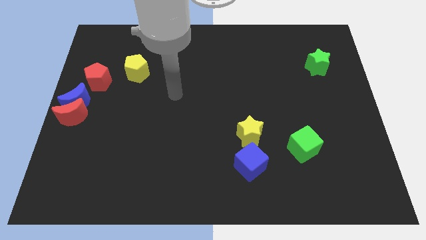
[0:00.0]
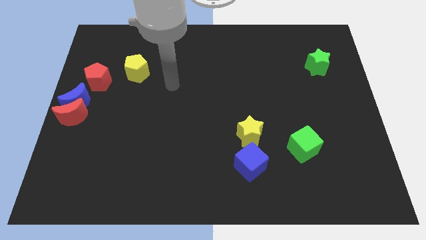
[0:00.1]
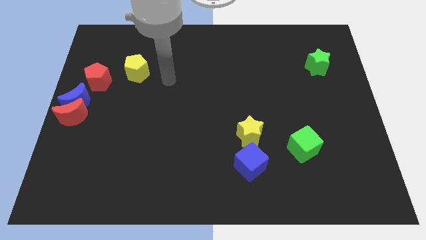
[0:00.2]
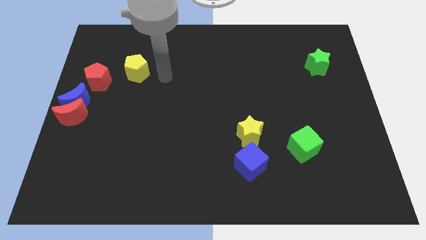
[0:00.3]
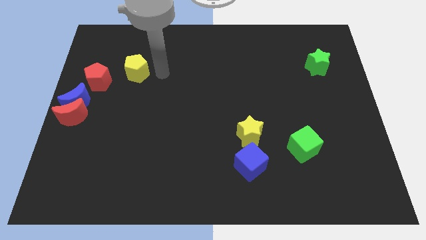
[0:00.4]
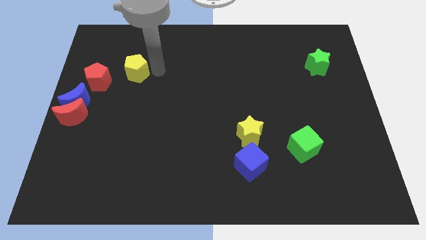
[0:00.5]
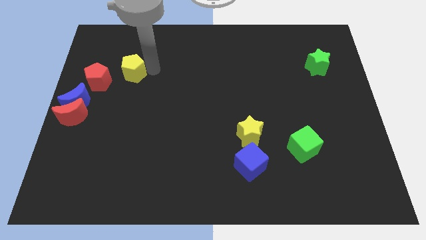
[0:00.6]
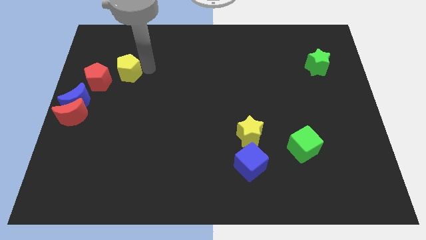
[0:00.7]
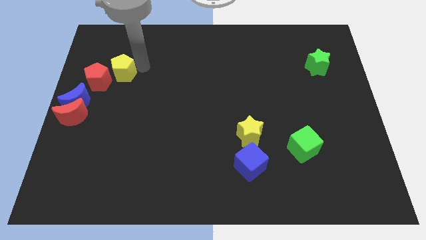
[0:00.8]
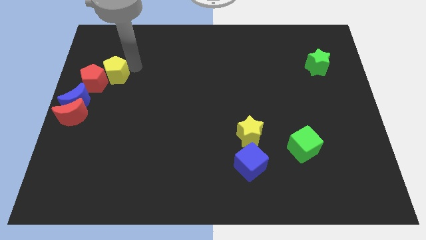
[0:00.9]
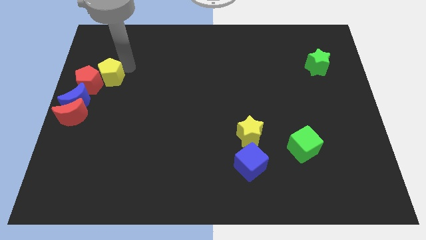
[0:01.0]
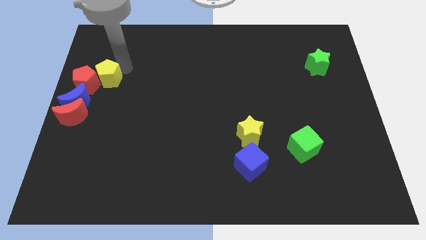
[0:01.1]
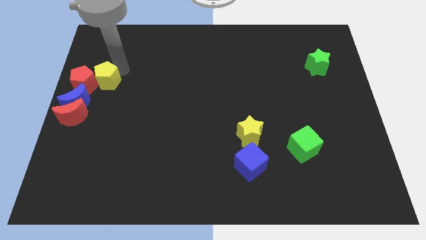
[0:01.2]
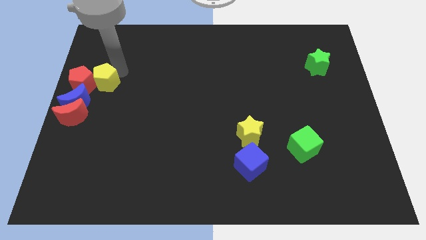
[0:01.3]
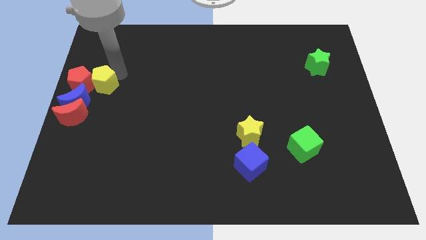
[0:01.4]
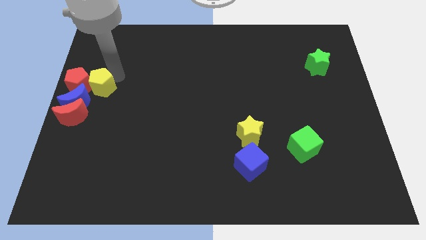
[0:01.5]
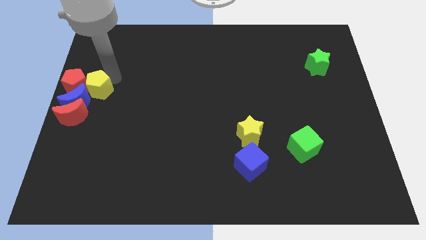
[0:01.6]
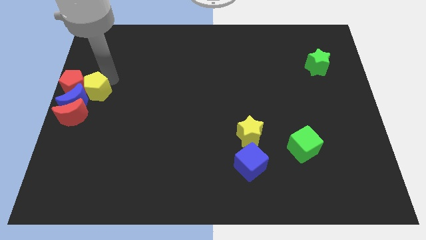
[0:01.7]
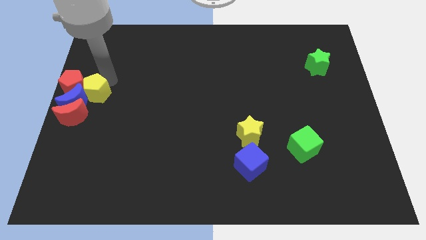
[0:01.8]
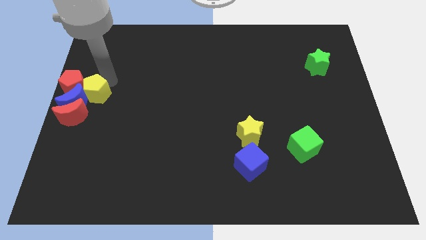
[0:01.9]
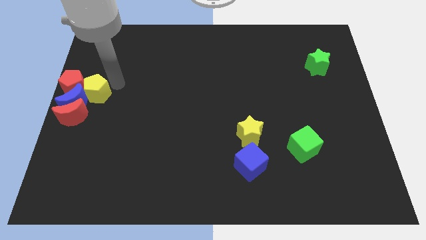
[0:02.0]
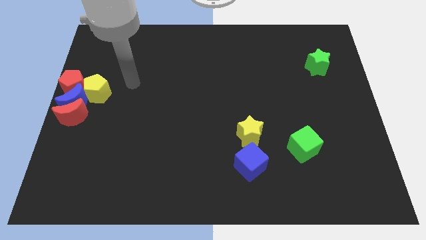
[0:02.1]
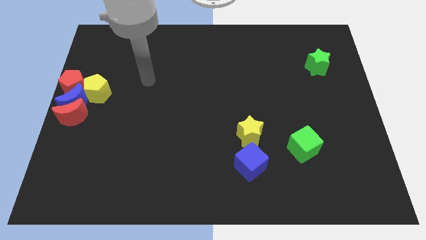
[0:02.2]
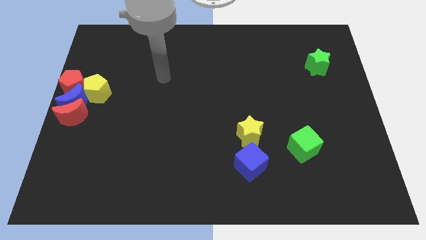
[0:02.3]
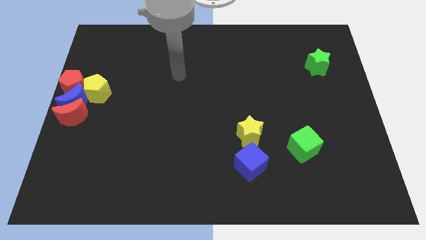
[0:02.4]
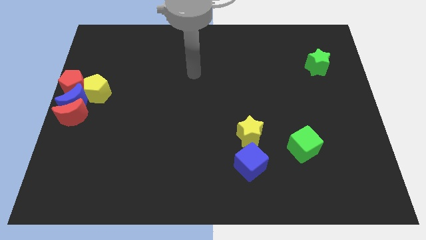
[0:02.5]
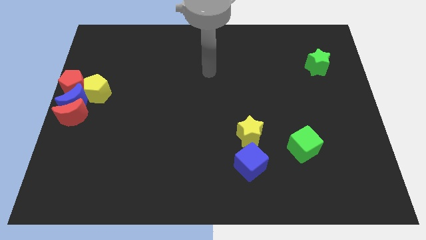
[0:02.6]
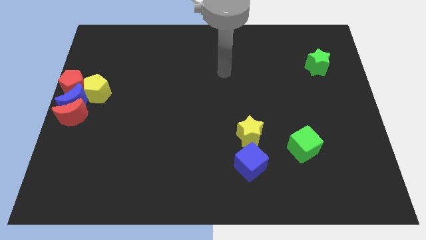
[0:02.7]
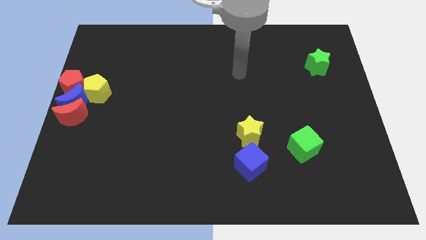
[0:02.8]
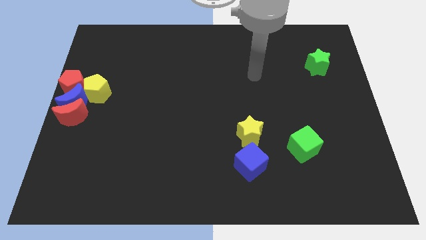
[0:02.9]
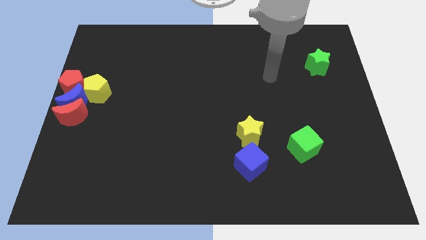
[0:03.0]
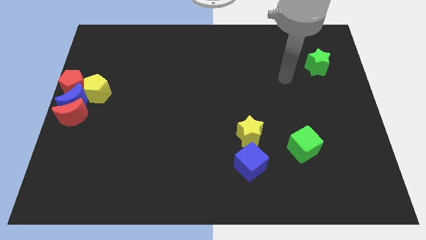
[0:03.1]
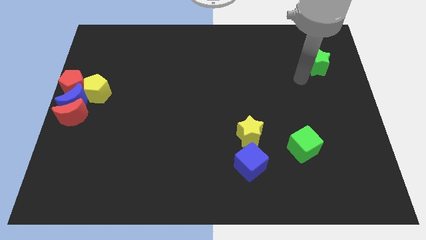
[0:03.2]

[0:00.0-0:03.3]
place red pentagon and yellow pentagon to the center left side of the board

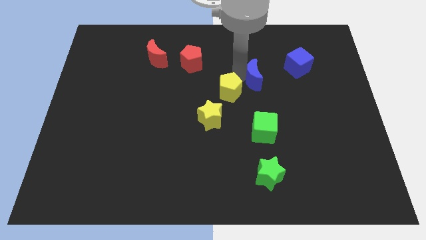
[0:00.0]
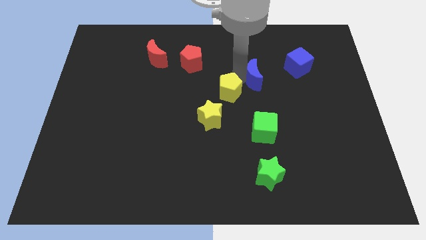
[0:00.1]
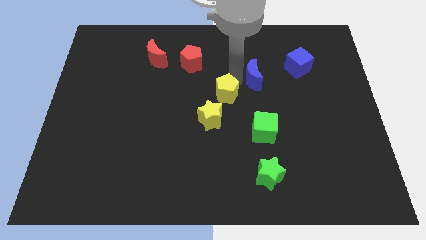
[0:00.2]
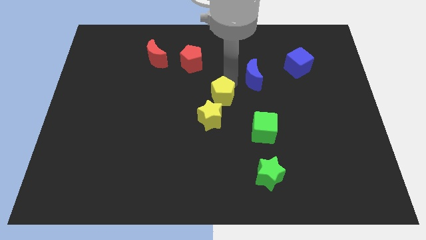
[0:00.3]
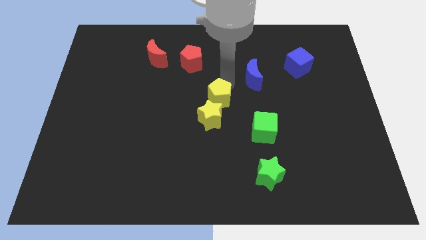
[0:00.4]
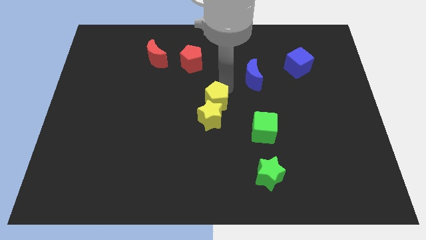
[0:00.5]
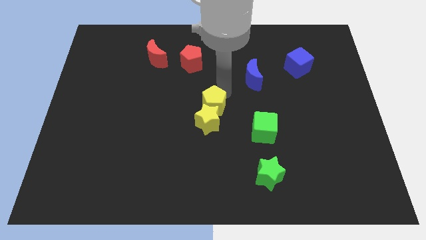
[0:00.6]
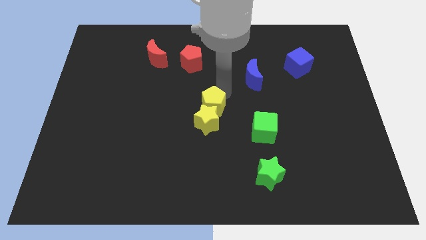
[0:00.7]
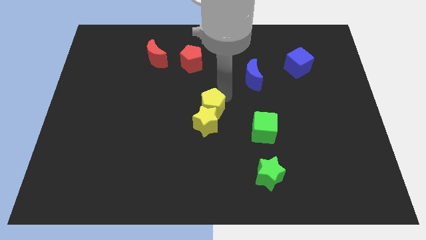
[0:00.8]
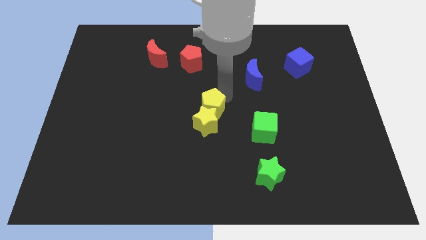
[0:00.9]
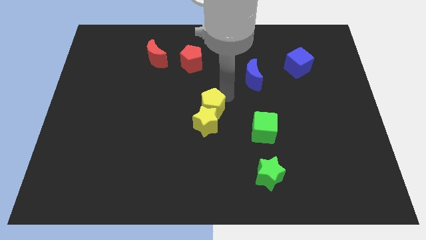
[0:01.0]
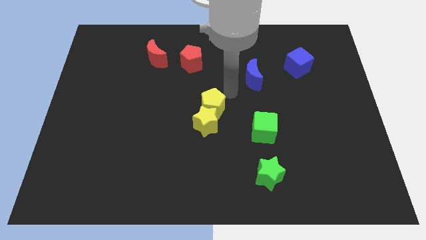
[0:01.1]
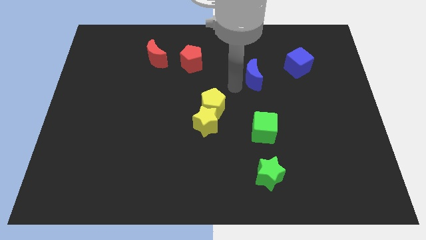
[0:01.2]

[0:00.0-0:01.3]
push yellow pentagon into the yellow star

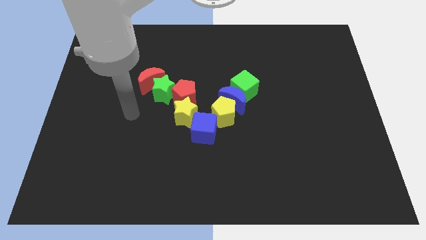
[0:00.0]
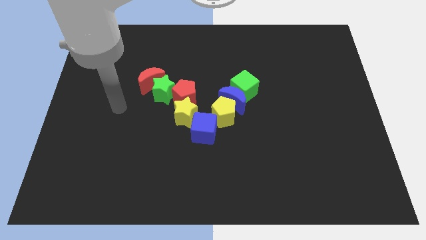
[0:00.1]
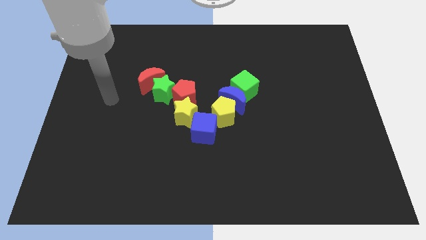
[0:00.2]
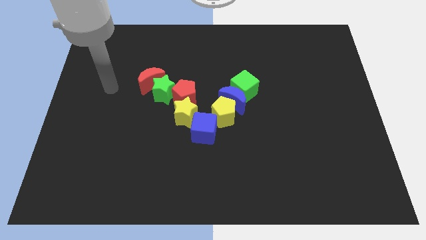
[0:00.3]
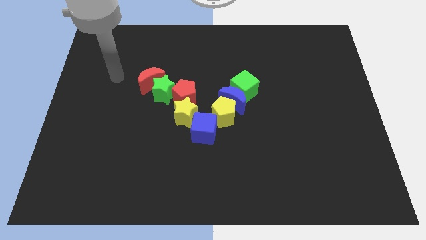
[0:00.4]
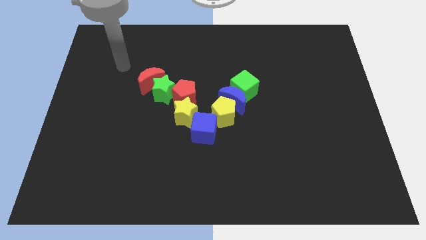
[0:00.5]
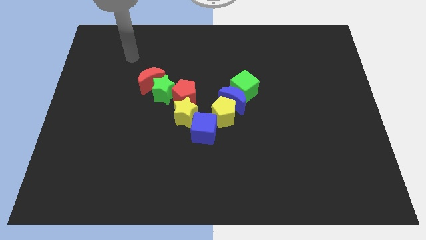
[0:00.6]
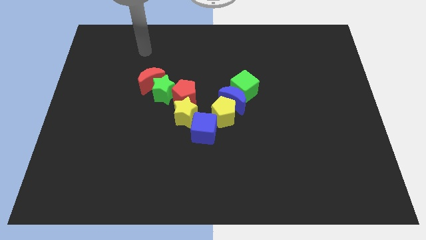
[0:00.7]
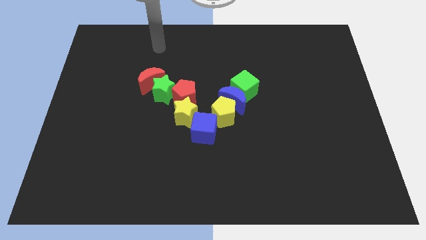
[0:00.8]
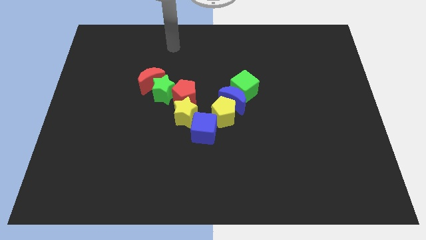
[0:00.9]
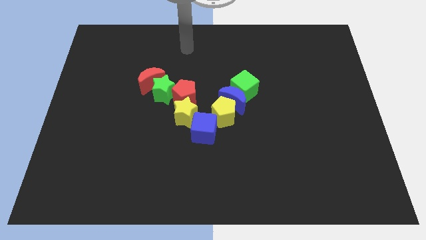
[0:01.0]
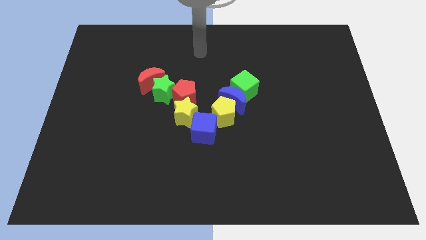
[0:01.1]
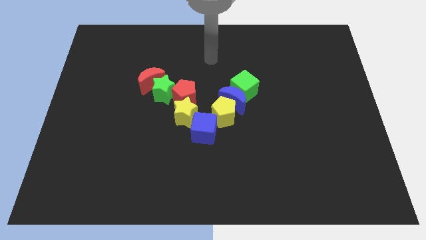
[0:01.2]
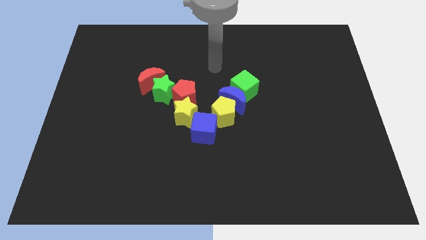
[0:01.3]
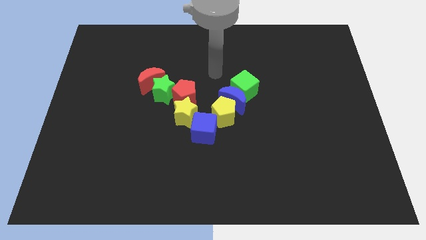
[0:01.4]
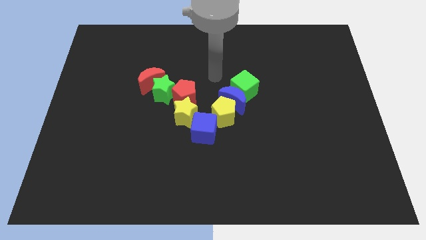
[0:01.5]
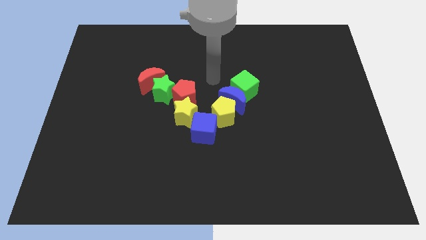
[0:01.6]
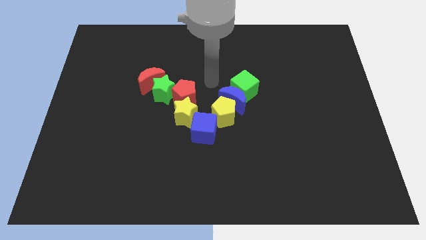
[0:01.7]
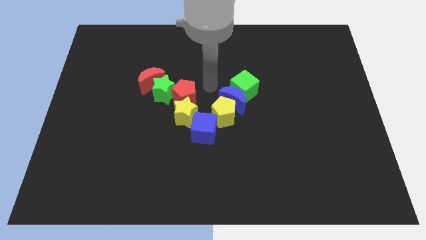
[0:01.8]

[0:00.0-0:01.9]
move the arm right to the red pentagon

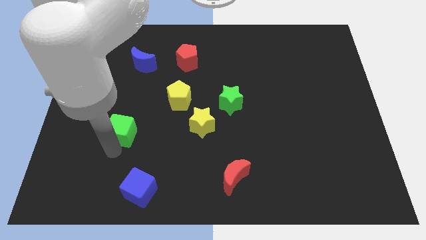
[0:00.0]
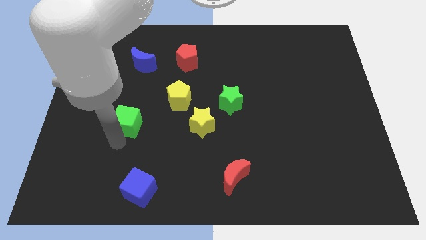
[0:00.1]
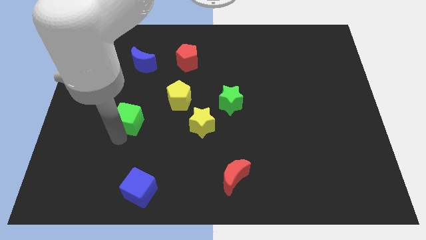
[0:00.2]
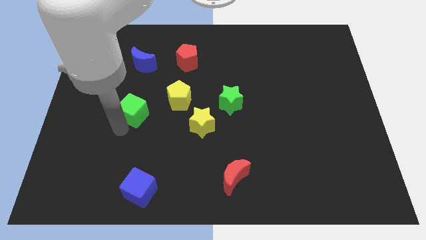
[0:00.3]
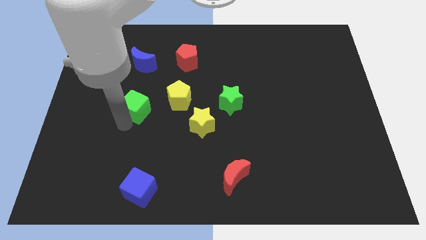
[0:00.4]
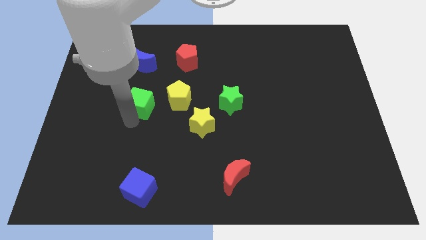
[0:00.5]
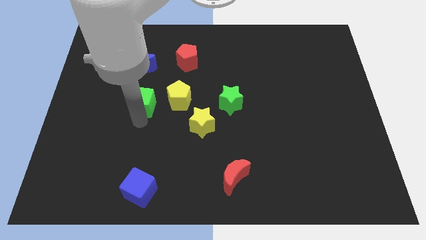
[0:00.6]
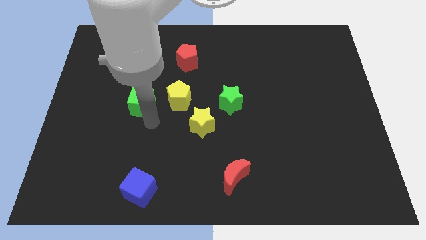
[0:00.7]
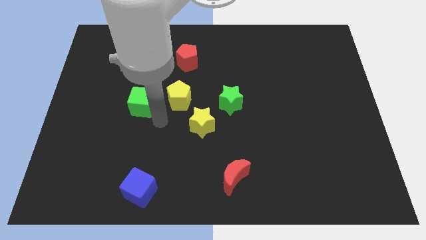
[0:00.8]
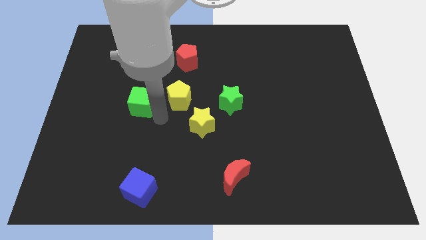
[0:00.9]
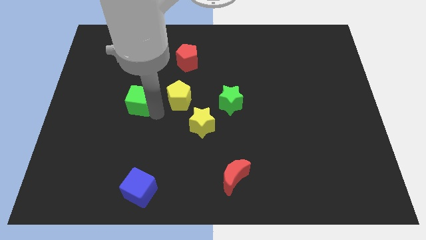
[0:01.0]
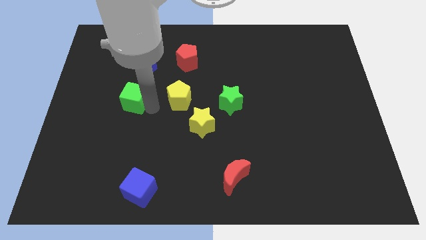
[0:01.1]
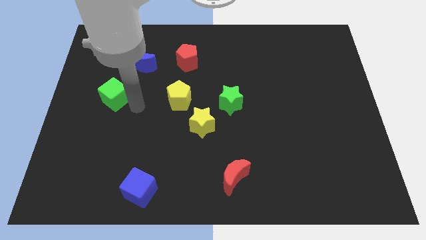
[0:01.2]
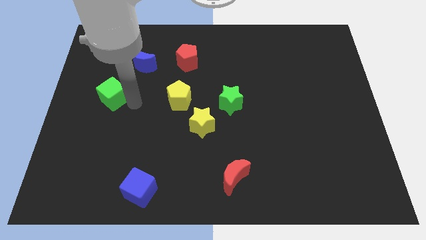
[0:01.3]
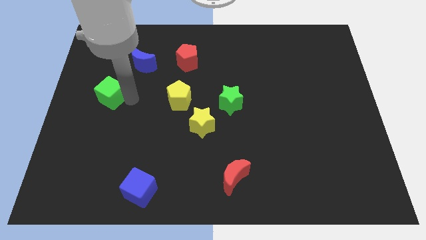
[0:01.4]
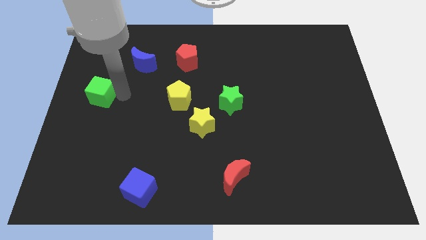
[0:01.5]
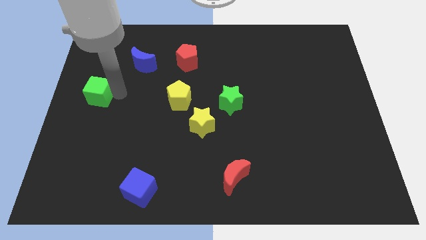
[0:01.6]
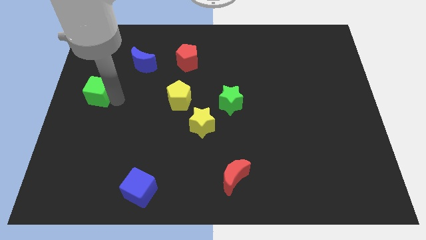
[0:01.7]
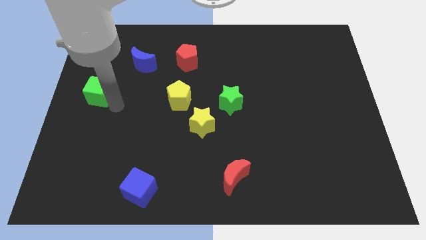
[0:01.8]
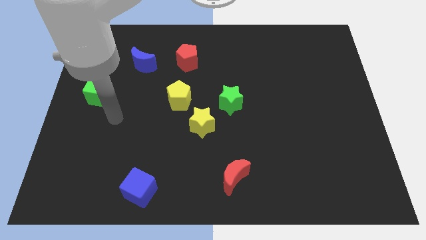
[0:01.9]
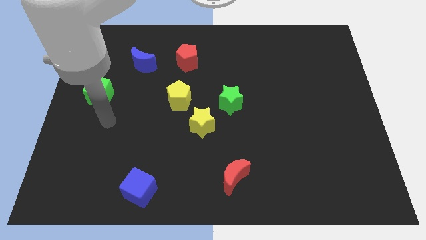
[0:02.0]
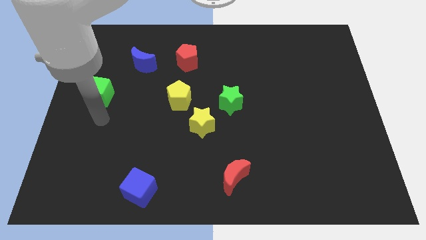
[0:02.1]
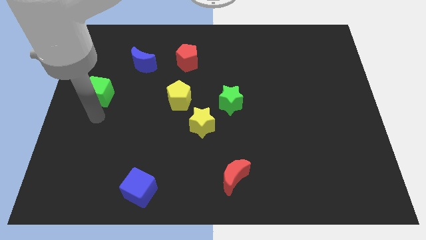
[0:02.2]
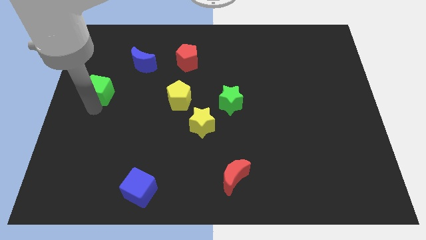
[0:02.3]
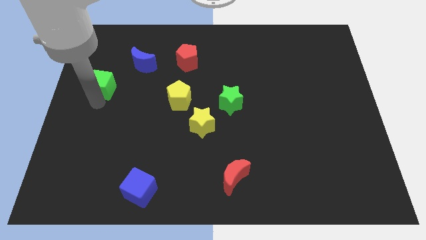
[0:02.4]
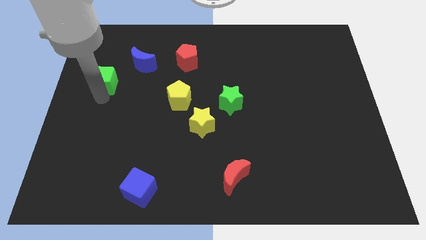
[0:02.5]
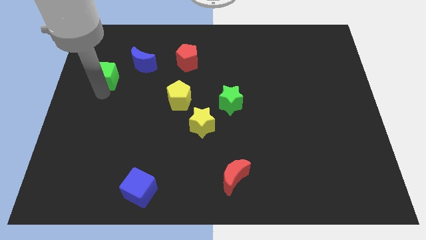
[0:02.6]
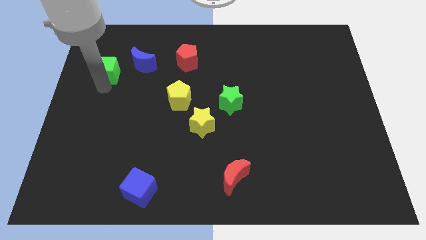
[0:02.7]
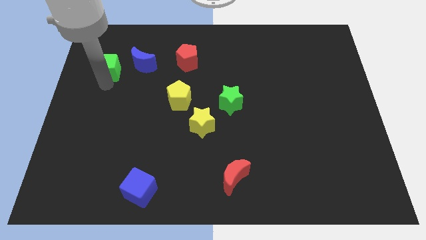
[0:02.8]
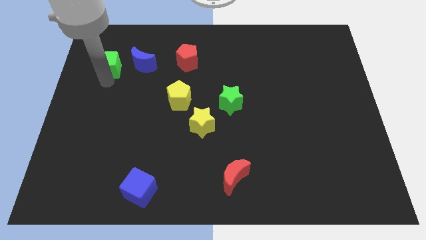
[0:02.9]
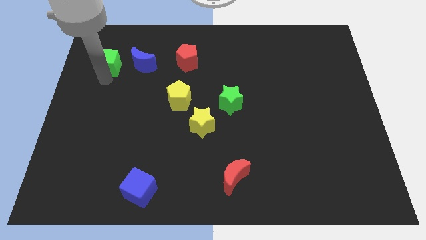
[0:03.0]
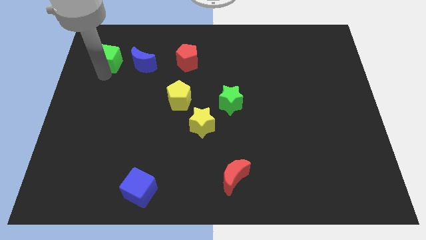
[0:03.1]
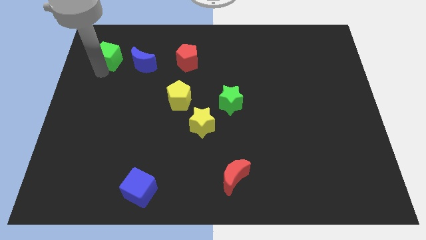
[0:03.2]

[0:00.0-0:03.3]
move the green cube left to the blue moon
